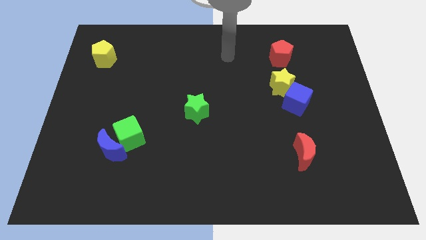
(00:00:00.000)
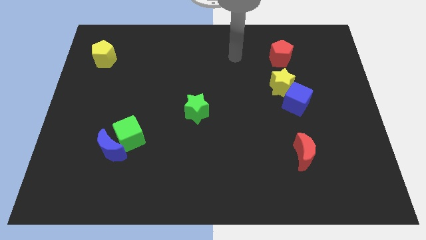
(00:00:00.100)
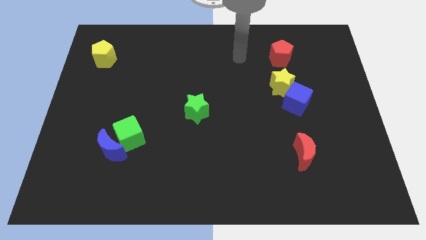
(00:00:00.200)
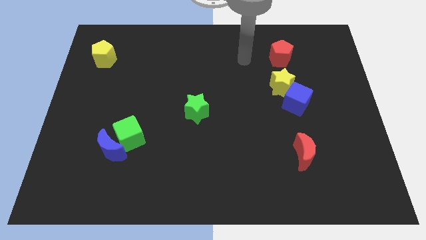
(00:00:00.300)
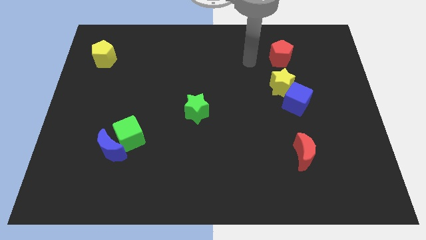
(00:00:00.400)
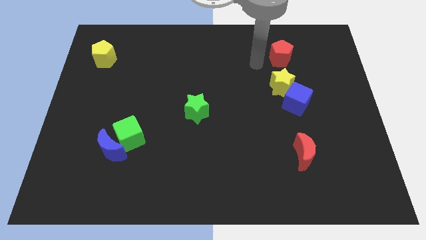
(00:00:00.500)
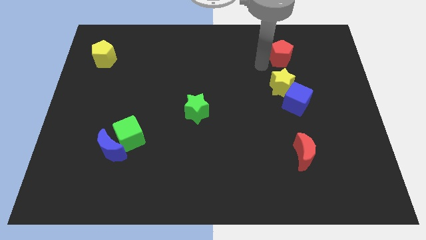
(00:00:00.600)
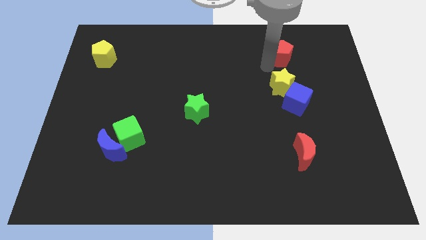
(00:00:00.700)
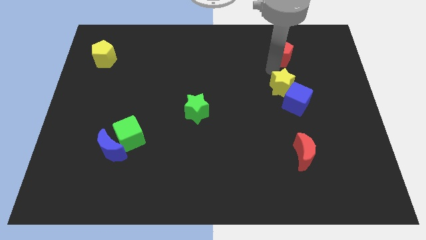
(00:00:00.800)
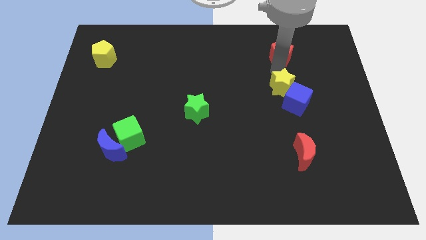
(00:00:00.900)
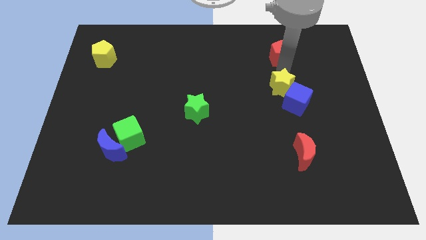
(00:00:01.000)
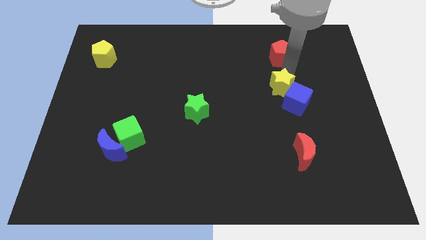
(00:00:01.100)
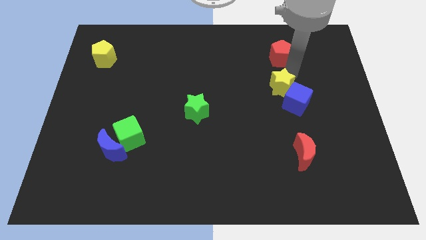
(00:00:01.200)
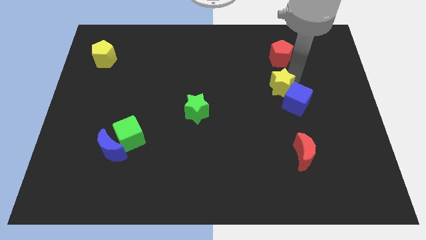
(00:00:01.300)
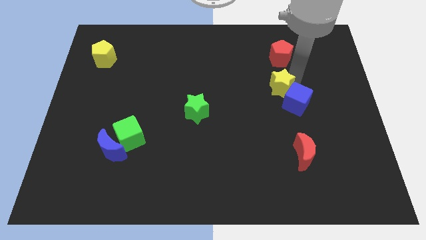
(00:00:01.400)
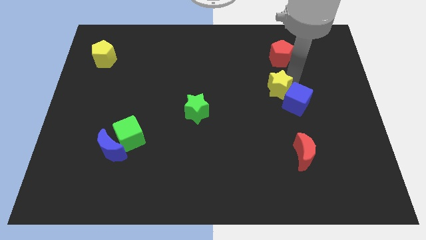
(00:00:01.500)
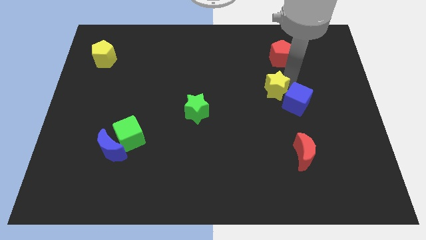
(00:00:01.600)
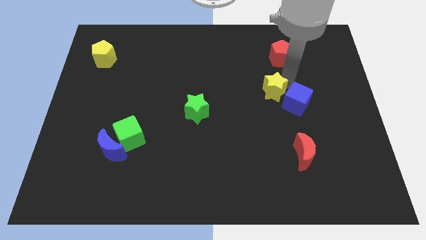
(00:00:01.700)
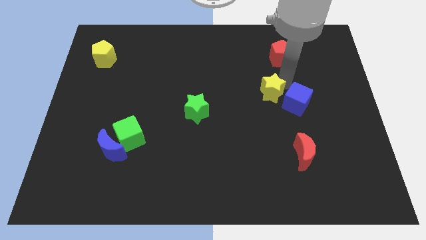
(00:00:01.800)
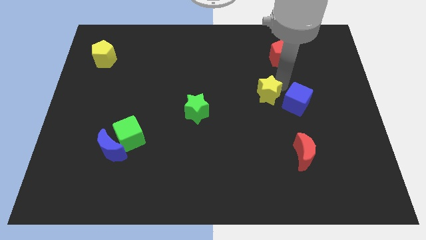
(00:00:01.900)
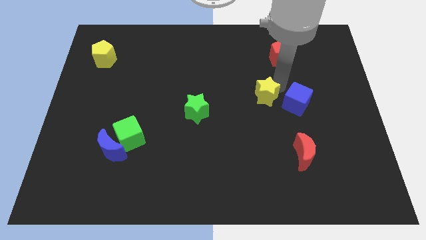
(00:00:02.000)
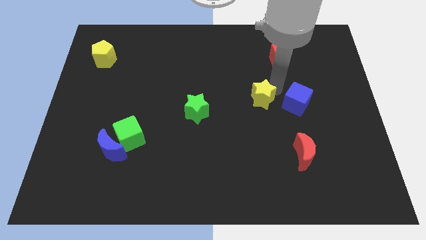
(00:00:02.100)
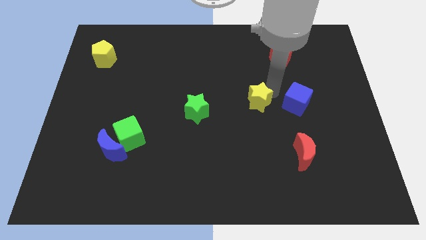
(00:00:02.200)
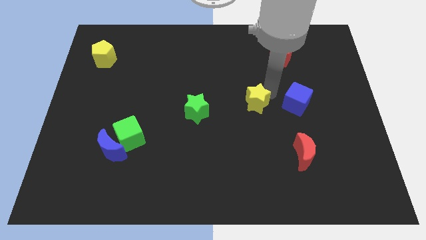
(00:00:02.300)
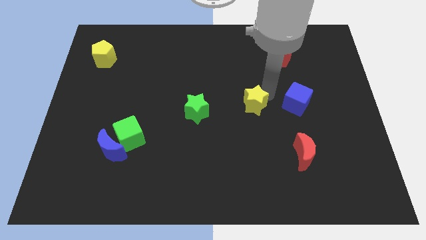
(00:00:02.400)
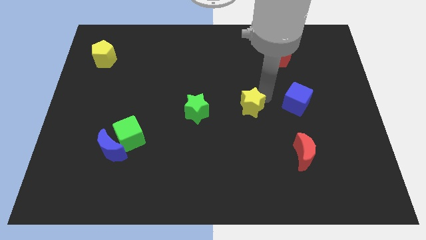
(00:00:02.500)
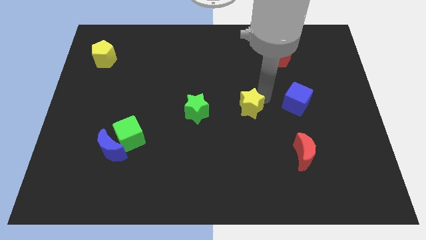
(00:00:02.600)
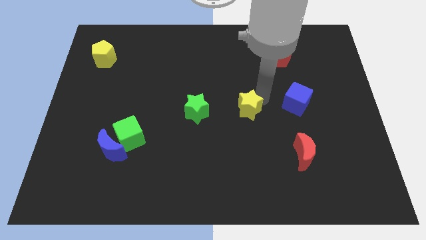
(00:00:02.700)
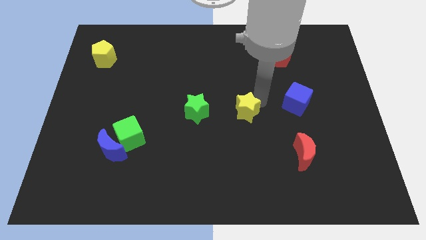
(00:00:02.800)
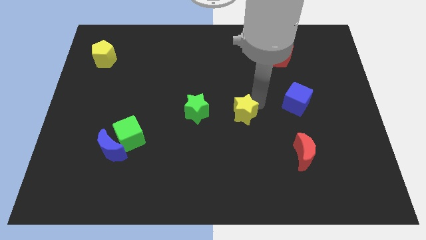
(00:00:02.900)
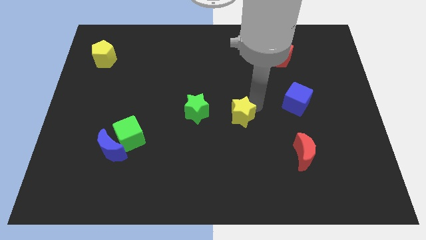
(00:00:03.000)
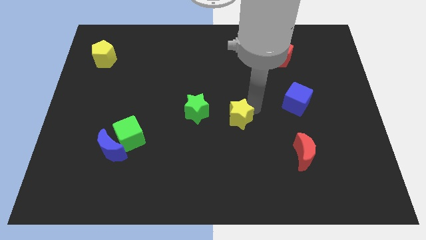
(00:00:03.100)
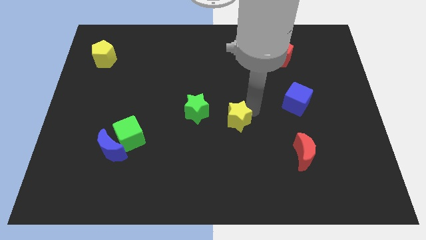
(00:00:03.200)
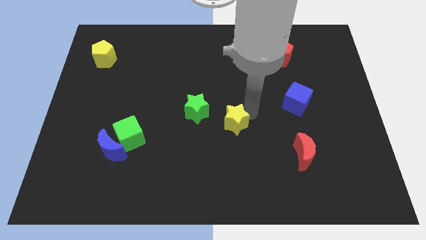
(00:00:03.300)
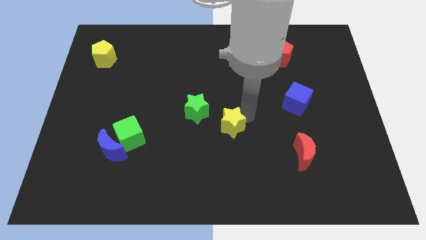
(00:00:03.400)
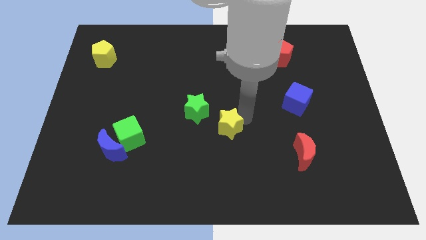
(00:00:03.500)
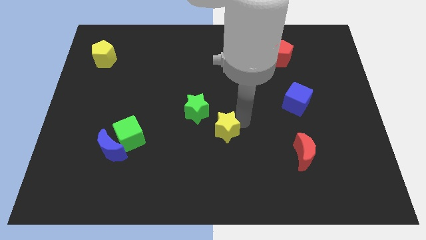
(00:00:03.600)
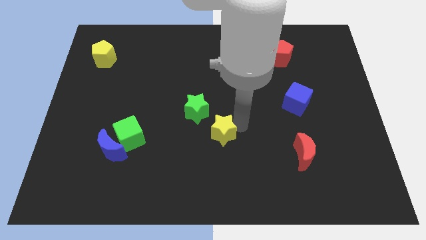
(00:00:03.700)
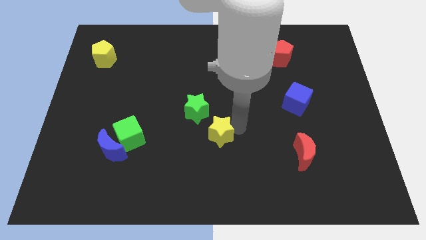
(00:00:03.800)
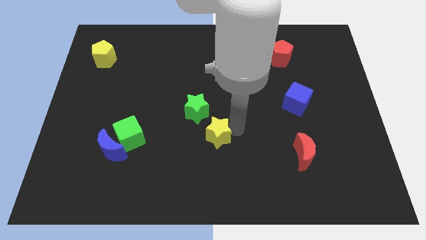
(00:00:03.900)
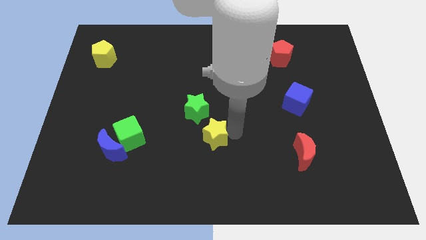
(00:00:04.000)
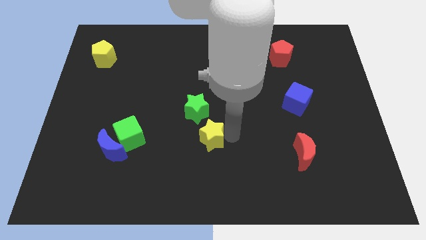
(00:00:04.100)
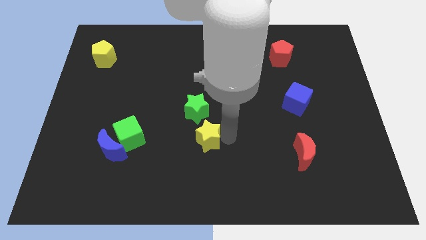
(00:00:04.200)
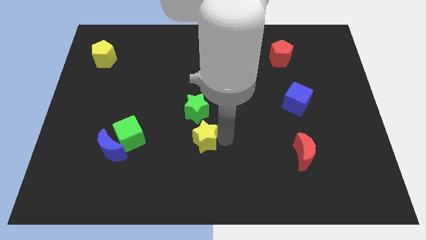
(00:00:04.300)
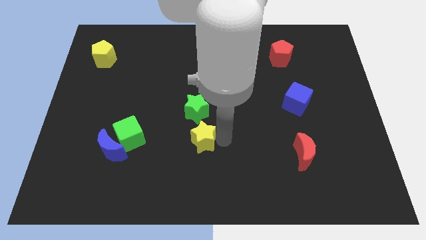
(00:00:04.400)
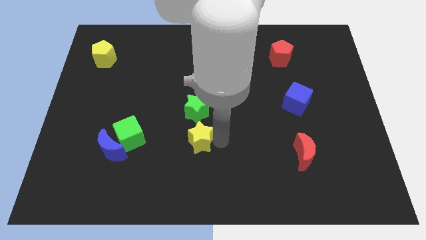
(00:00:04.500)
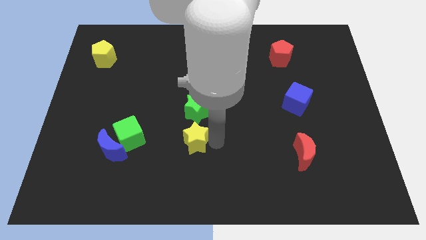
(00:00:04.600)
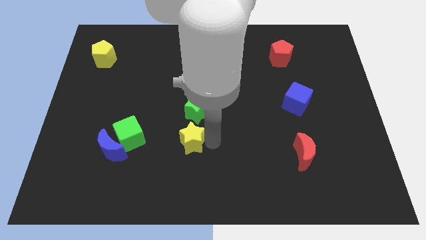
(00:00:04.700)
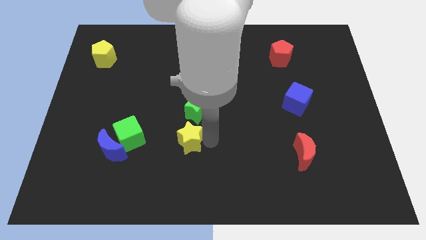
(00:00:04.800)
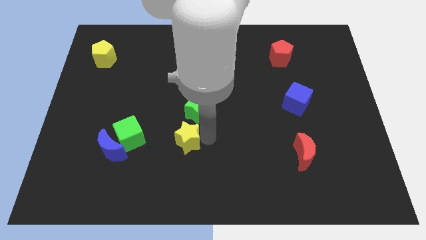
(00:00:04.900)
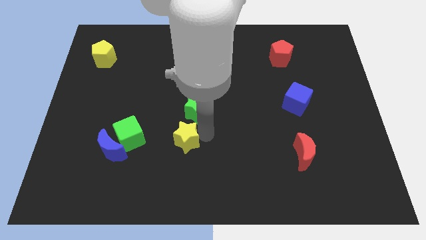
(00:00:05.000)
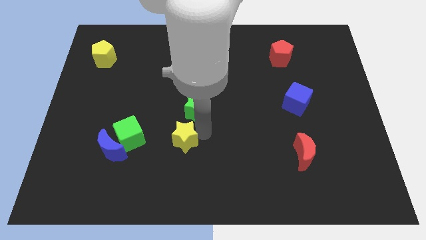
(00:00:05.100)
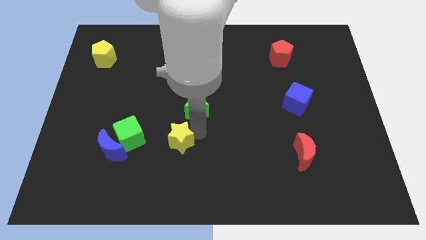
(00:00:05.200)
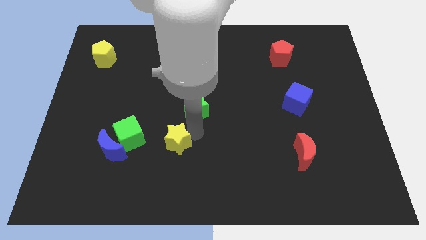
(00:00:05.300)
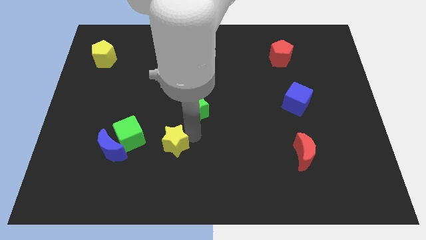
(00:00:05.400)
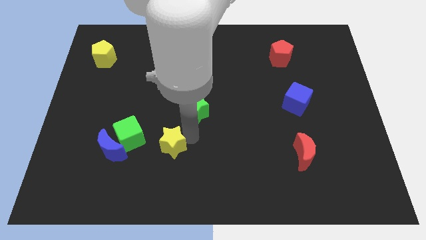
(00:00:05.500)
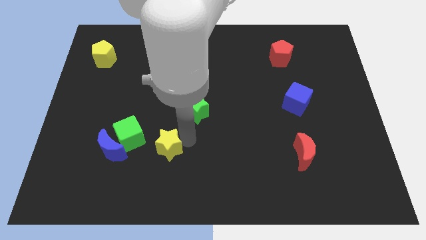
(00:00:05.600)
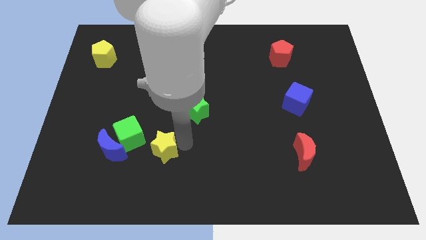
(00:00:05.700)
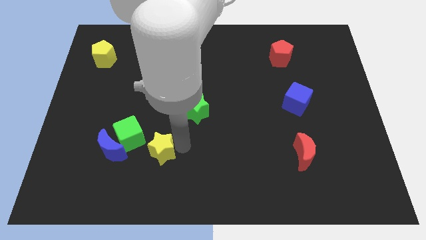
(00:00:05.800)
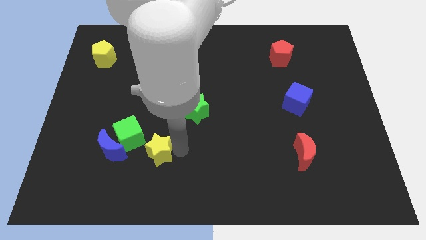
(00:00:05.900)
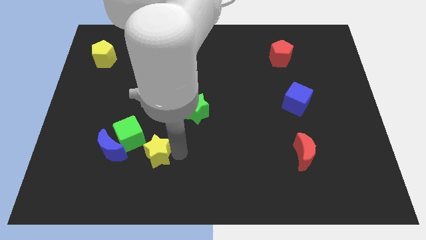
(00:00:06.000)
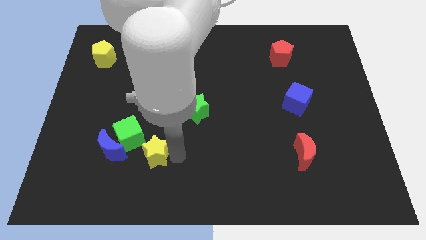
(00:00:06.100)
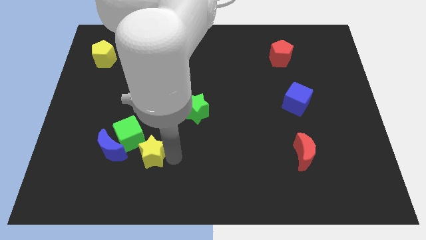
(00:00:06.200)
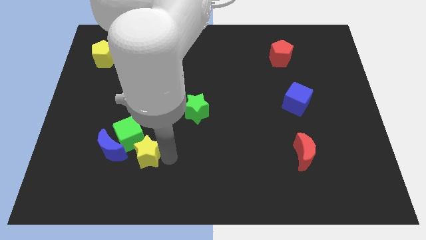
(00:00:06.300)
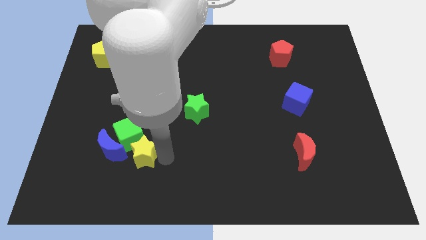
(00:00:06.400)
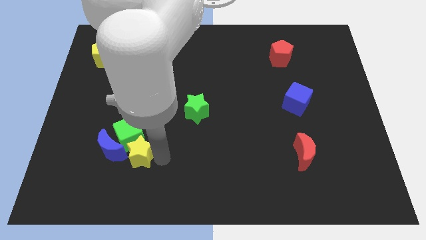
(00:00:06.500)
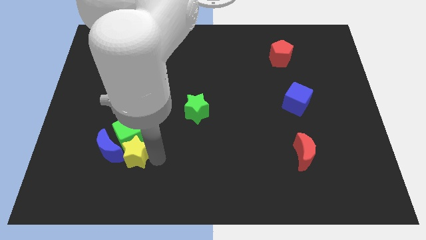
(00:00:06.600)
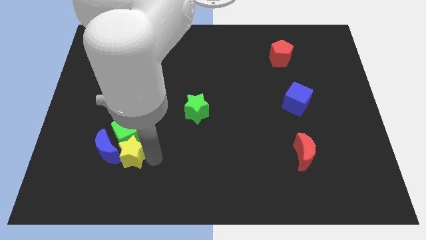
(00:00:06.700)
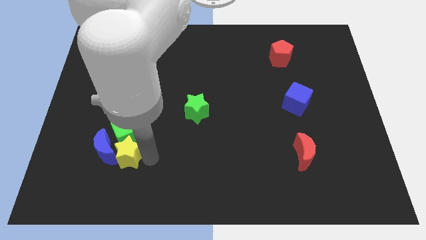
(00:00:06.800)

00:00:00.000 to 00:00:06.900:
move the yellow star to the blue moon

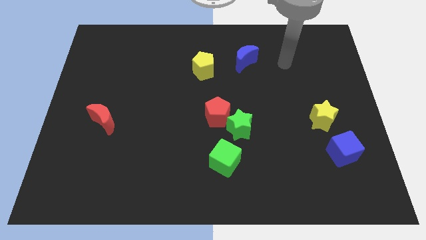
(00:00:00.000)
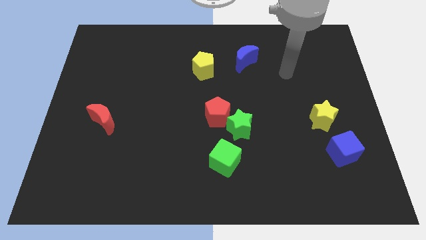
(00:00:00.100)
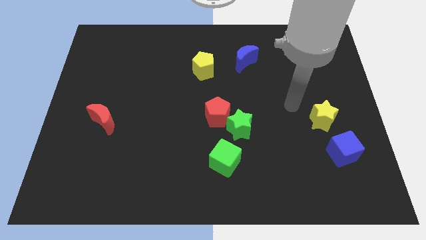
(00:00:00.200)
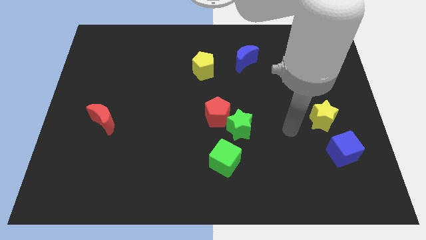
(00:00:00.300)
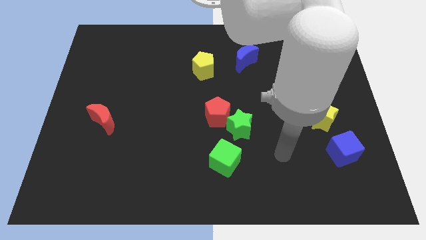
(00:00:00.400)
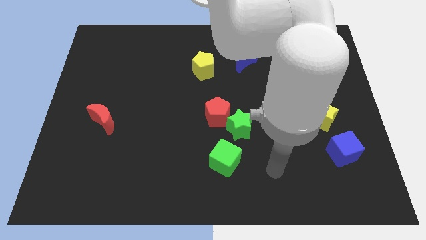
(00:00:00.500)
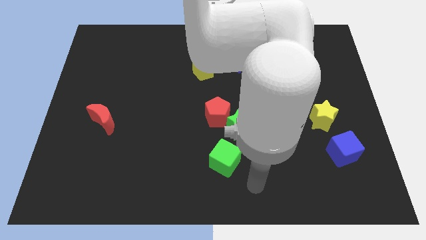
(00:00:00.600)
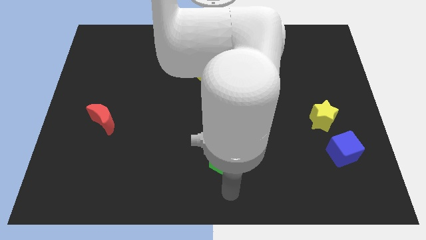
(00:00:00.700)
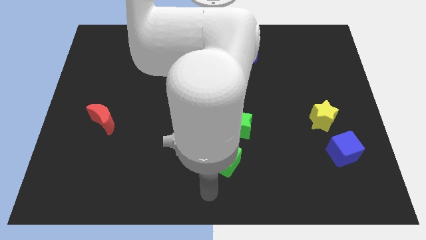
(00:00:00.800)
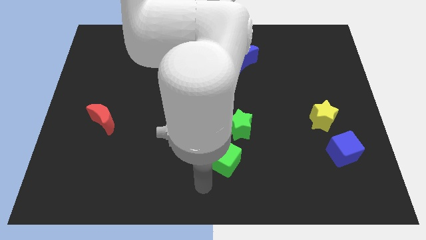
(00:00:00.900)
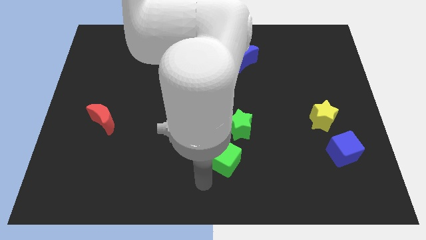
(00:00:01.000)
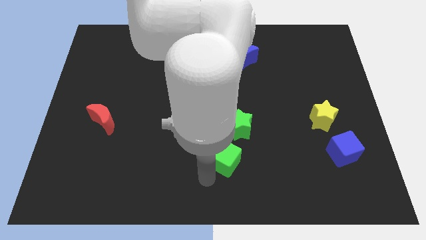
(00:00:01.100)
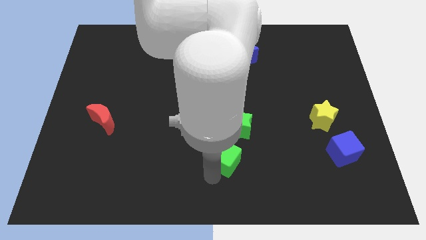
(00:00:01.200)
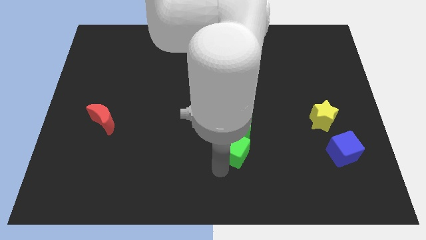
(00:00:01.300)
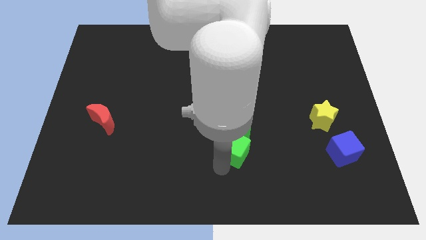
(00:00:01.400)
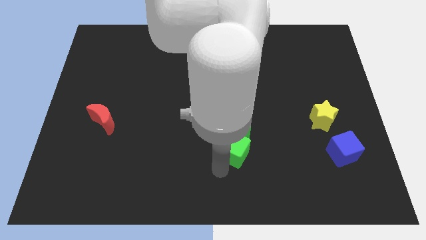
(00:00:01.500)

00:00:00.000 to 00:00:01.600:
put the green cube towards the green star
